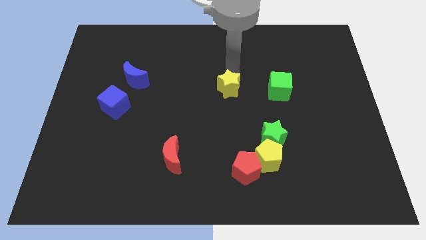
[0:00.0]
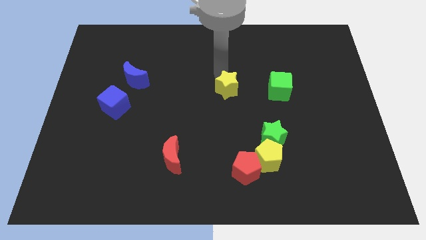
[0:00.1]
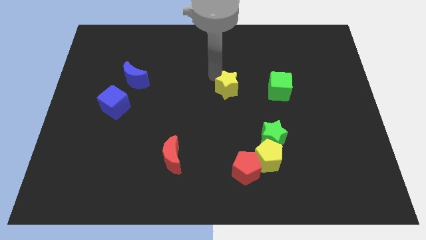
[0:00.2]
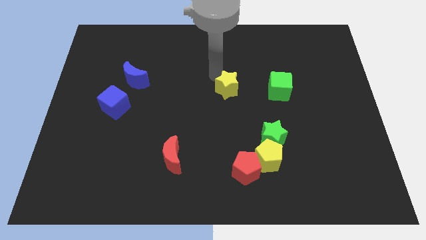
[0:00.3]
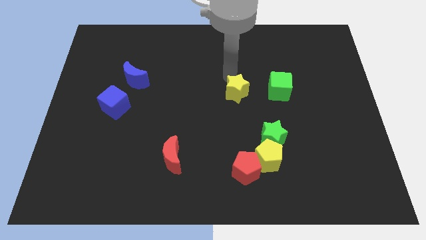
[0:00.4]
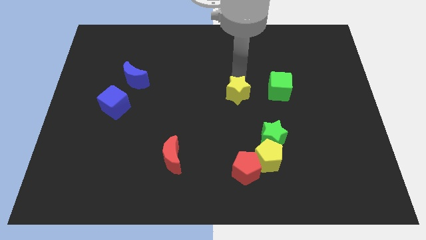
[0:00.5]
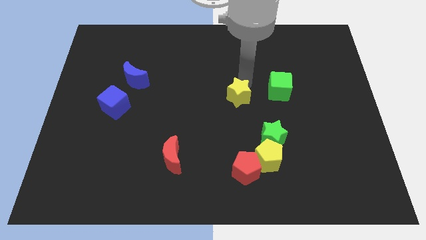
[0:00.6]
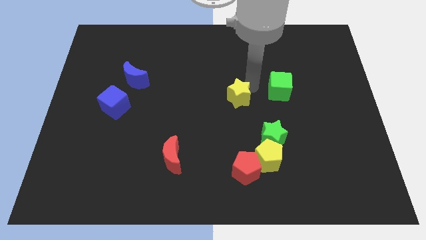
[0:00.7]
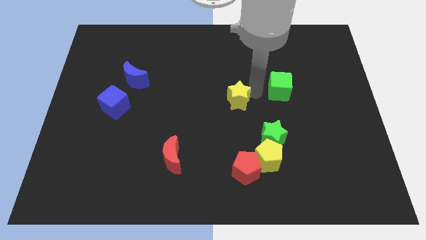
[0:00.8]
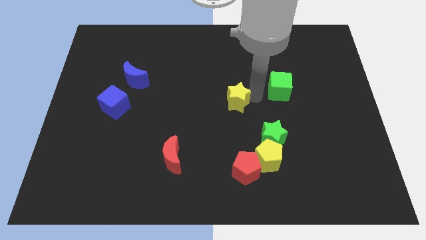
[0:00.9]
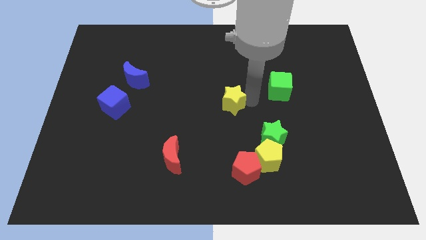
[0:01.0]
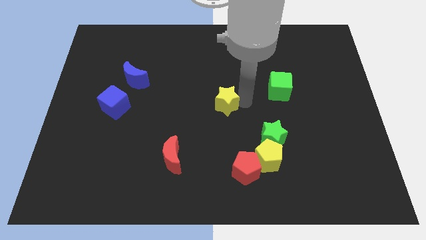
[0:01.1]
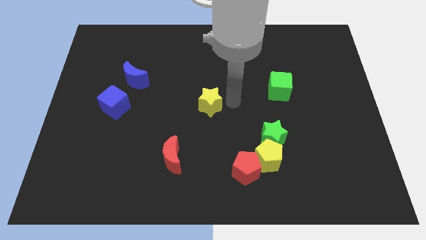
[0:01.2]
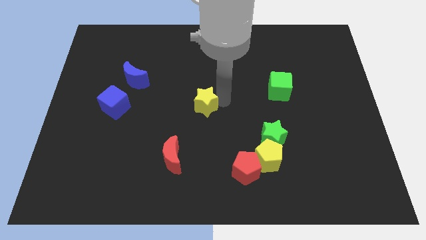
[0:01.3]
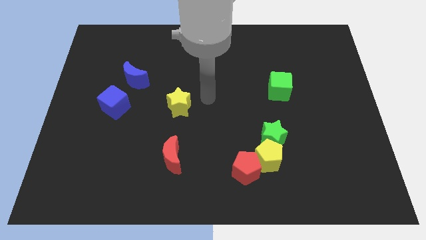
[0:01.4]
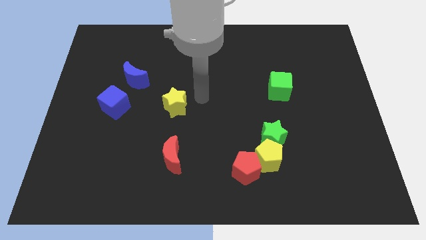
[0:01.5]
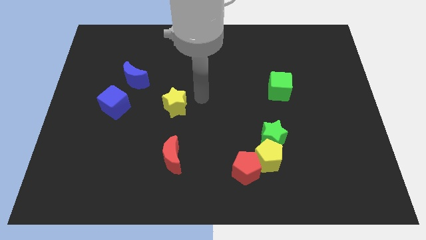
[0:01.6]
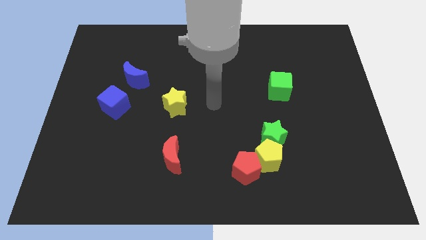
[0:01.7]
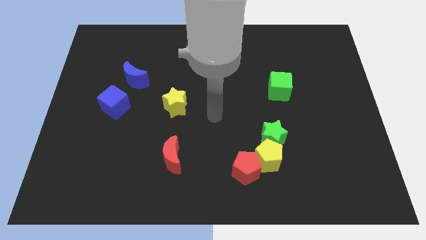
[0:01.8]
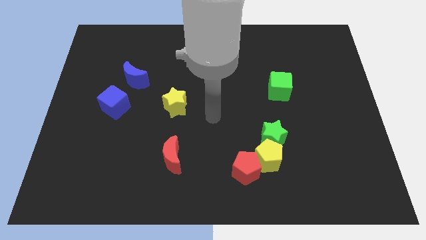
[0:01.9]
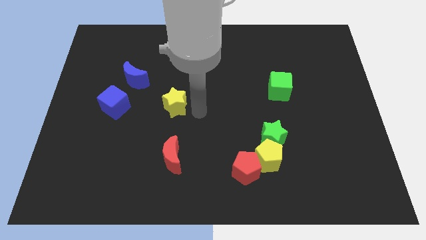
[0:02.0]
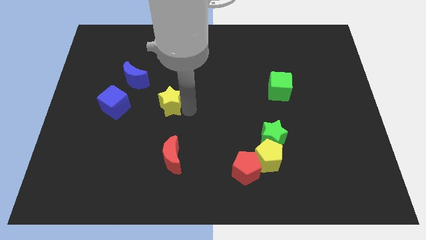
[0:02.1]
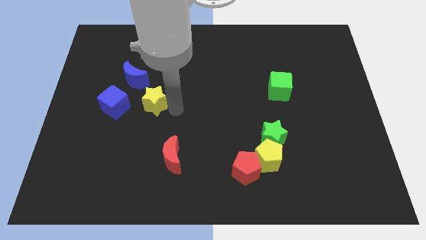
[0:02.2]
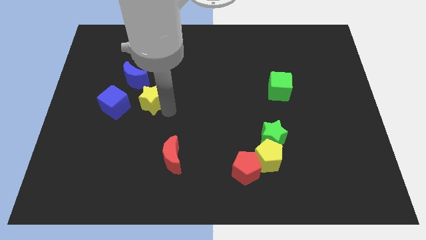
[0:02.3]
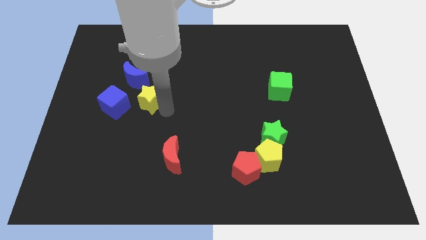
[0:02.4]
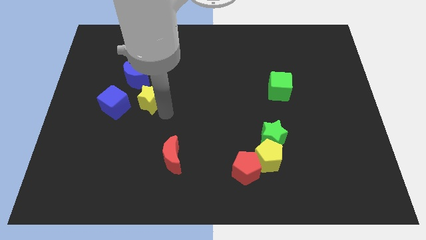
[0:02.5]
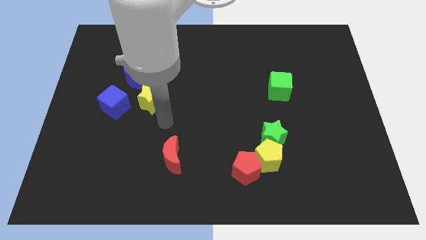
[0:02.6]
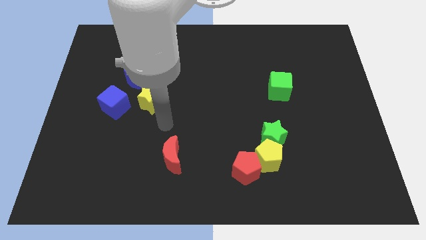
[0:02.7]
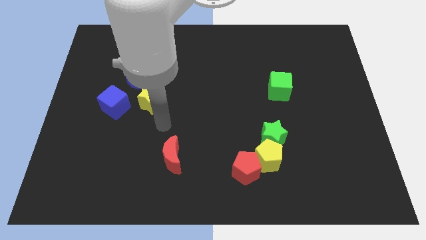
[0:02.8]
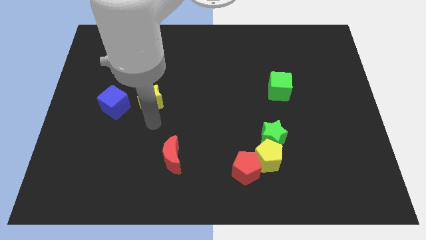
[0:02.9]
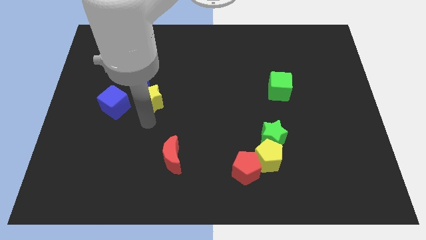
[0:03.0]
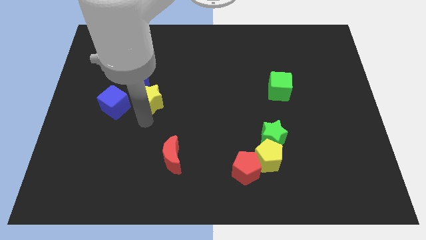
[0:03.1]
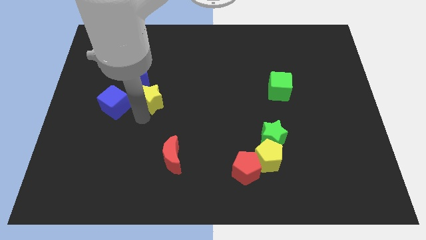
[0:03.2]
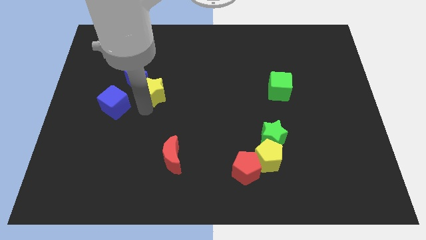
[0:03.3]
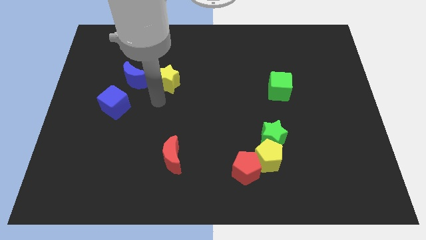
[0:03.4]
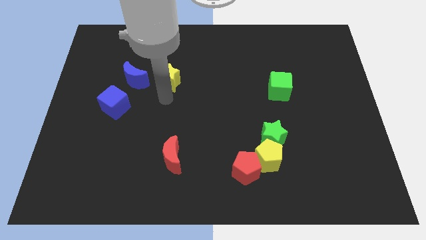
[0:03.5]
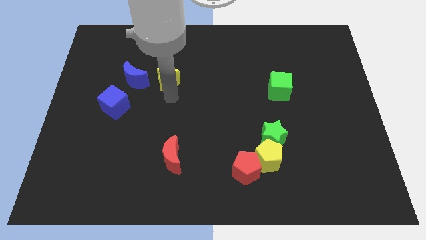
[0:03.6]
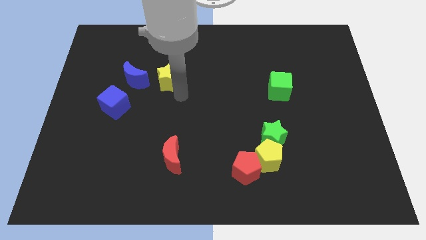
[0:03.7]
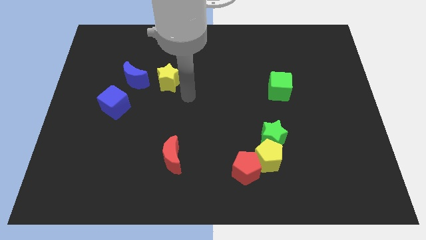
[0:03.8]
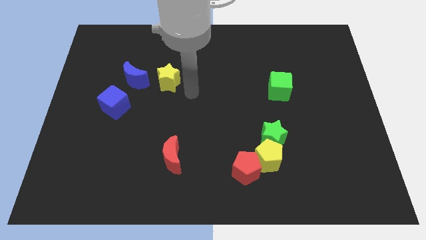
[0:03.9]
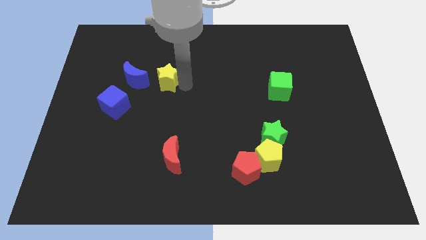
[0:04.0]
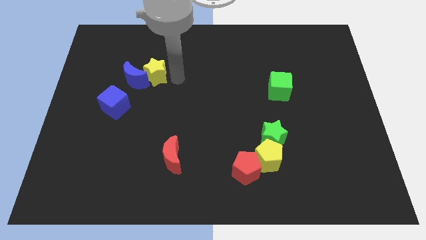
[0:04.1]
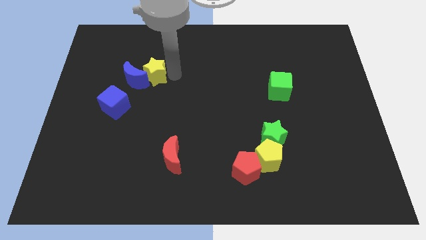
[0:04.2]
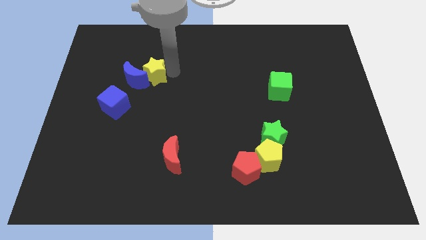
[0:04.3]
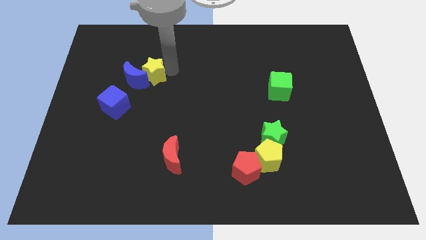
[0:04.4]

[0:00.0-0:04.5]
move yellow star to the top right of blue moon

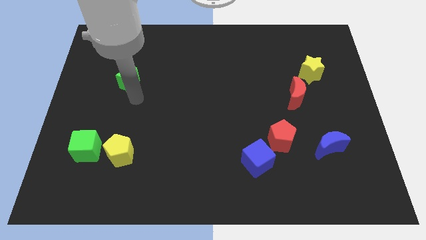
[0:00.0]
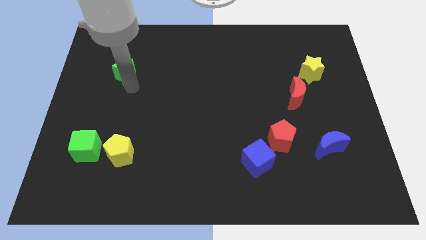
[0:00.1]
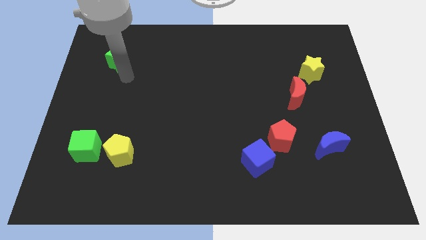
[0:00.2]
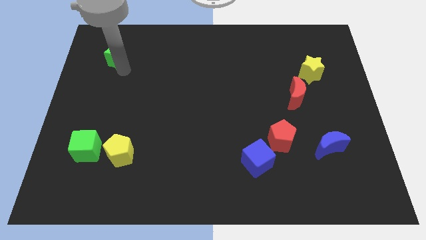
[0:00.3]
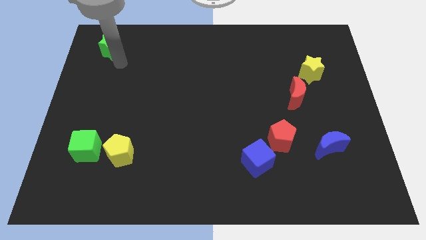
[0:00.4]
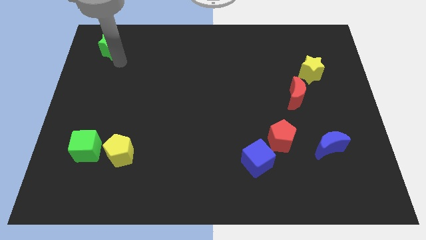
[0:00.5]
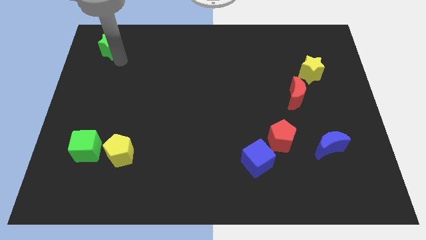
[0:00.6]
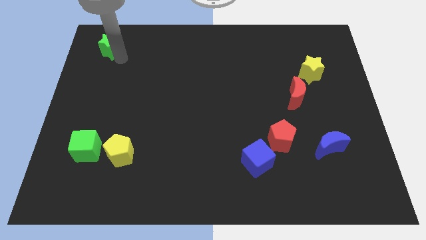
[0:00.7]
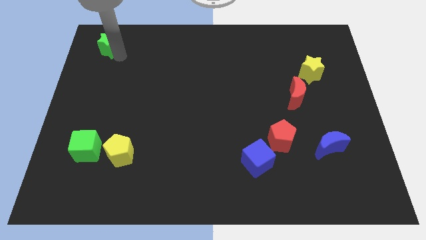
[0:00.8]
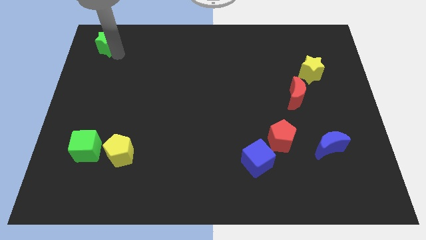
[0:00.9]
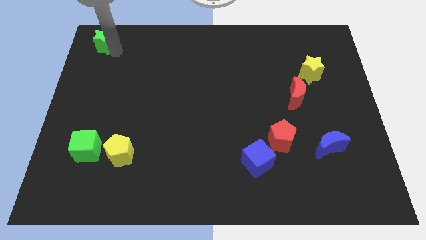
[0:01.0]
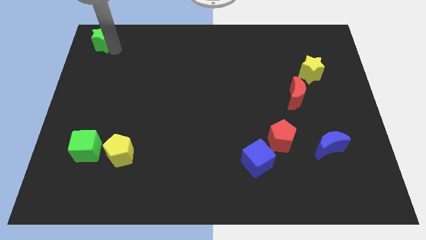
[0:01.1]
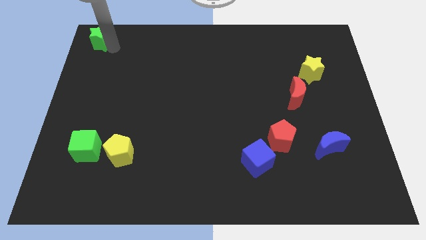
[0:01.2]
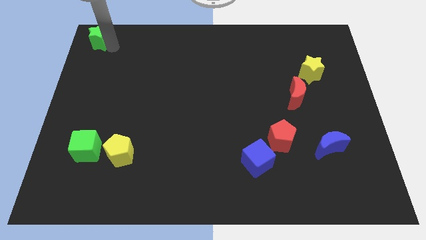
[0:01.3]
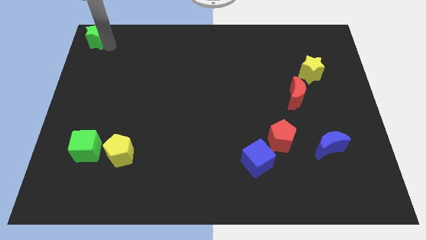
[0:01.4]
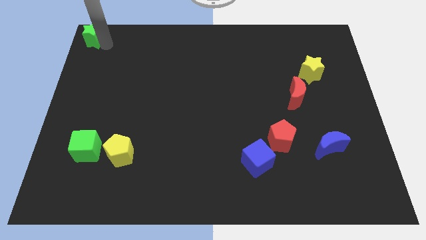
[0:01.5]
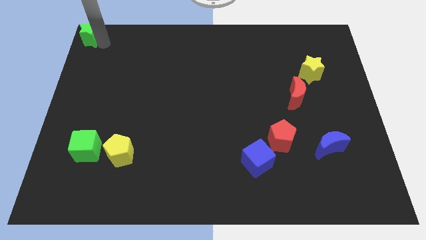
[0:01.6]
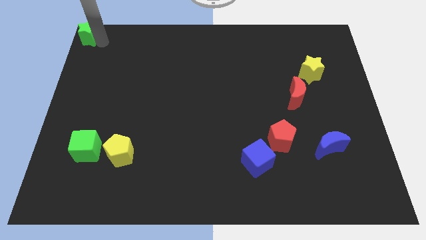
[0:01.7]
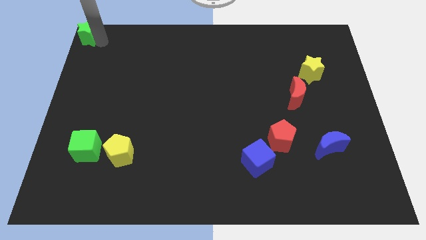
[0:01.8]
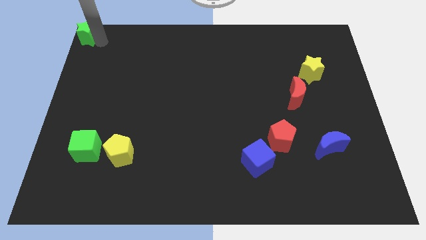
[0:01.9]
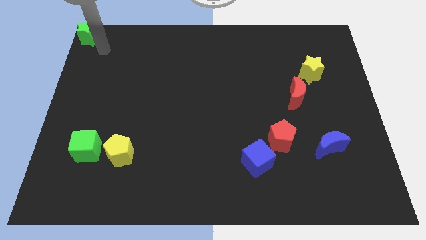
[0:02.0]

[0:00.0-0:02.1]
slide the green star to the top left corner

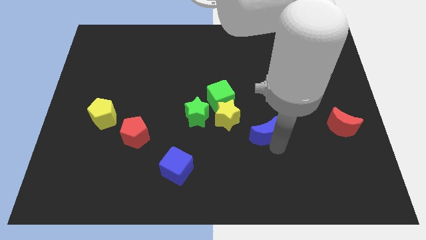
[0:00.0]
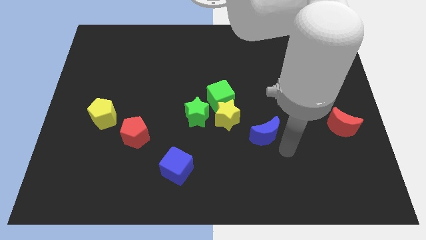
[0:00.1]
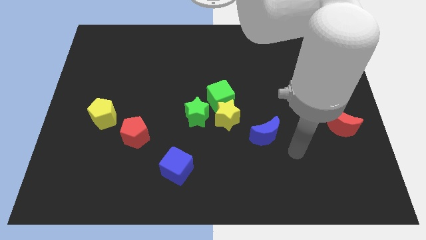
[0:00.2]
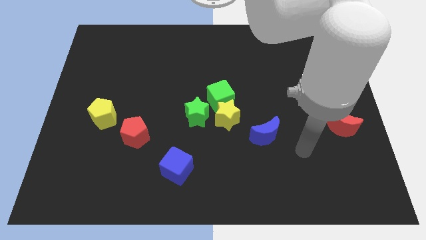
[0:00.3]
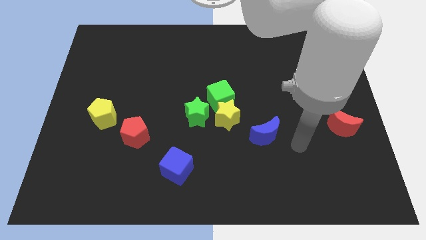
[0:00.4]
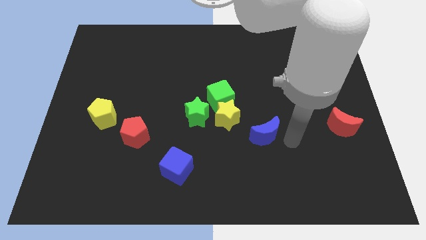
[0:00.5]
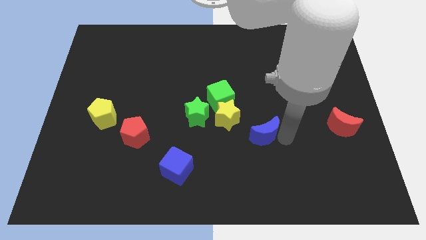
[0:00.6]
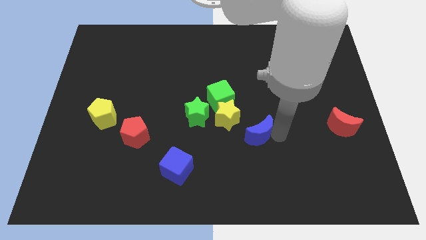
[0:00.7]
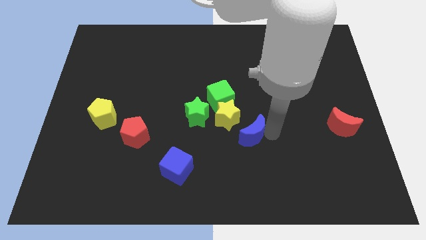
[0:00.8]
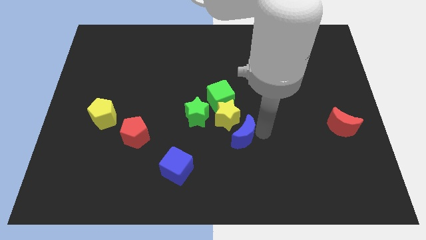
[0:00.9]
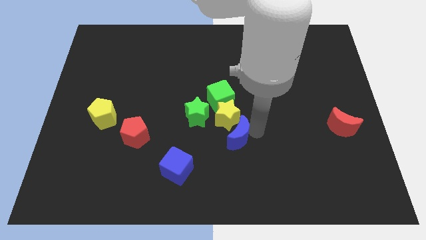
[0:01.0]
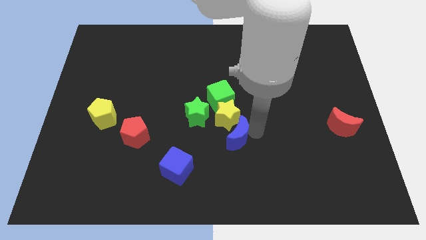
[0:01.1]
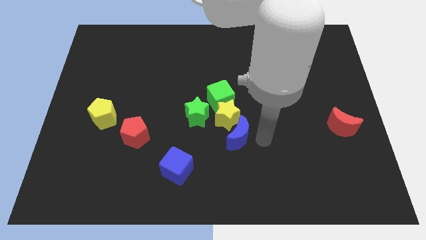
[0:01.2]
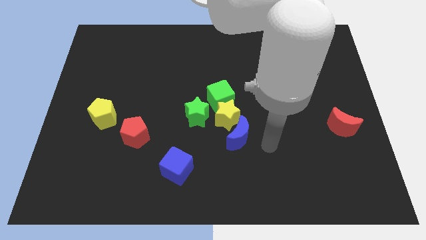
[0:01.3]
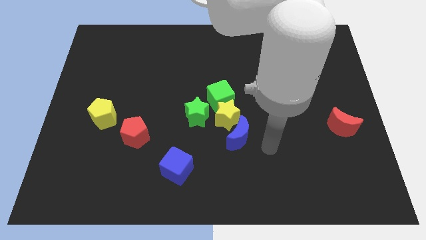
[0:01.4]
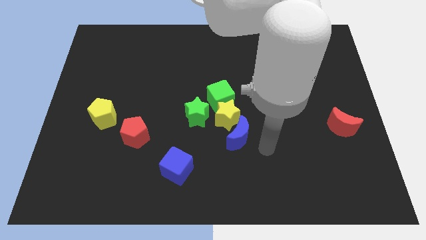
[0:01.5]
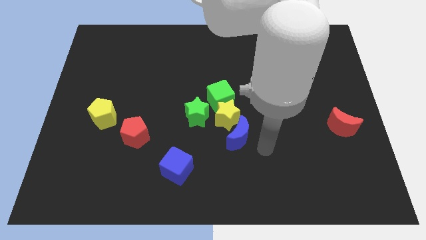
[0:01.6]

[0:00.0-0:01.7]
move the blue moon close to the yellow star

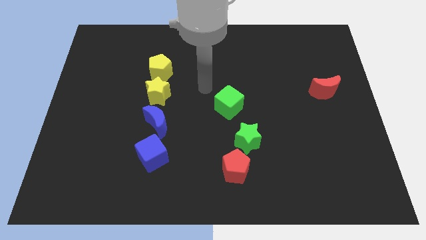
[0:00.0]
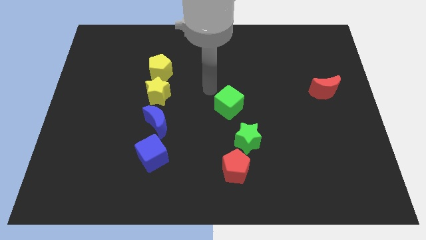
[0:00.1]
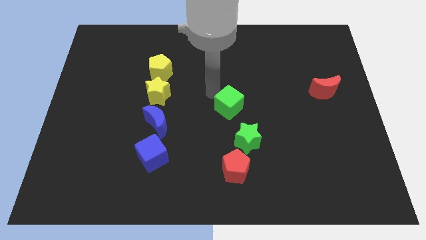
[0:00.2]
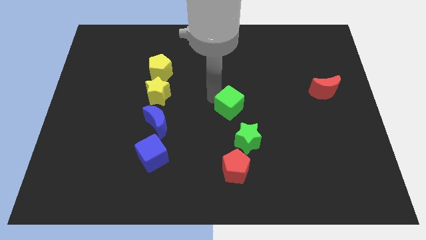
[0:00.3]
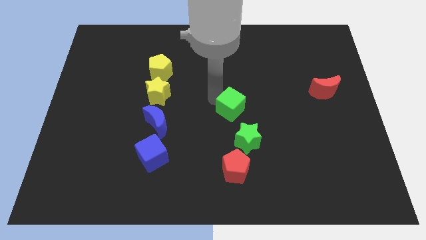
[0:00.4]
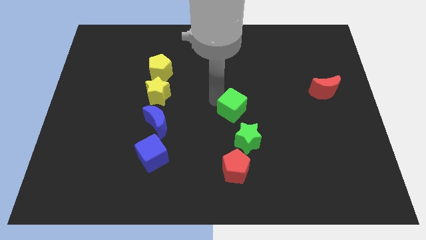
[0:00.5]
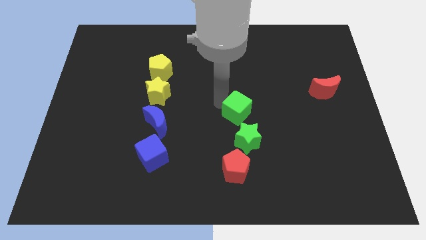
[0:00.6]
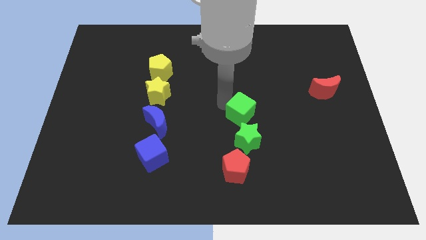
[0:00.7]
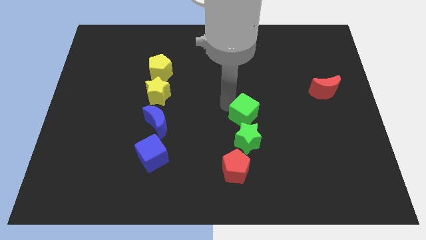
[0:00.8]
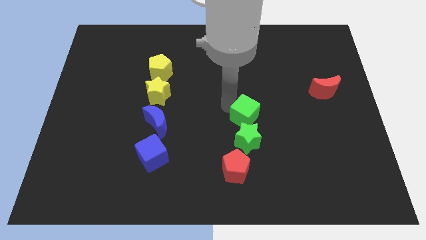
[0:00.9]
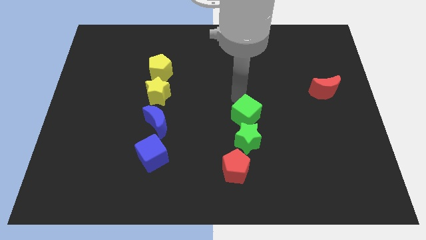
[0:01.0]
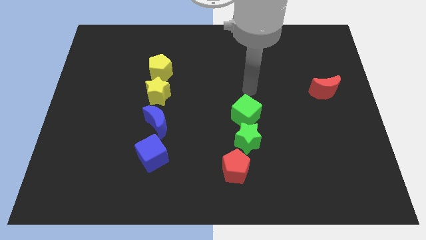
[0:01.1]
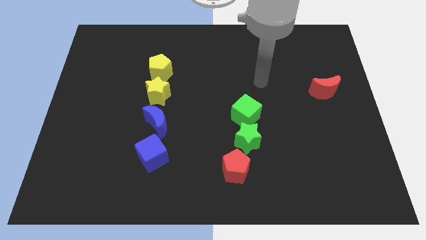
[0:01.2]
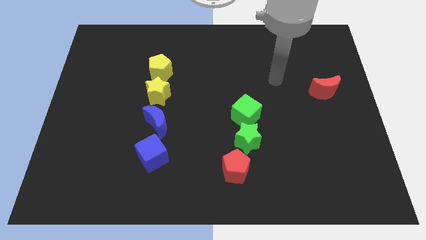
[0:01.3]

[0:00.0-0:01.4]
move the green cube into the green star
